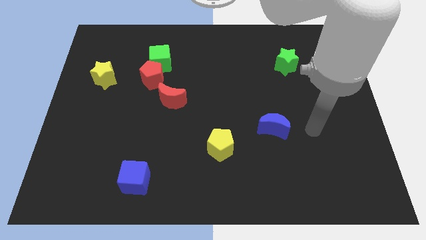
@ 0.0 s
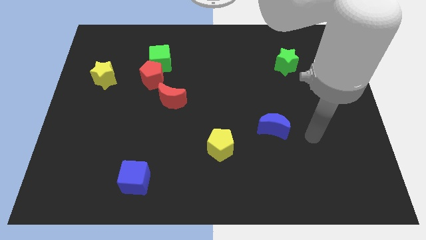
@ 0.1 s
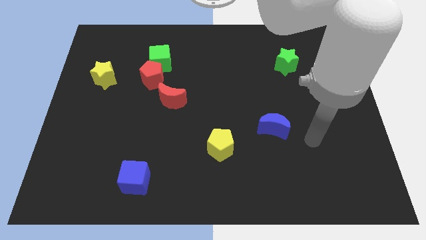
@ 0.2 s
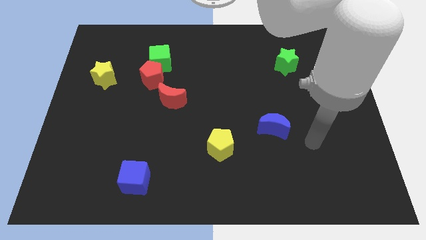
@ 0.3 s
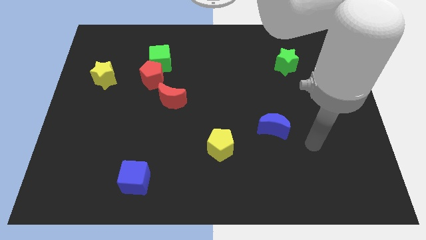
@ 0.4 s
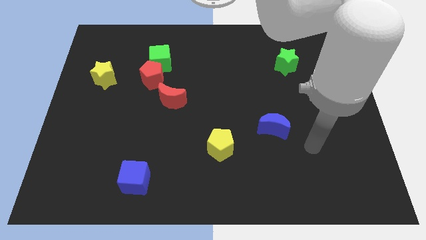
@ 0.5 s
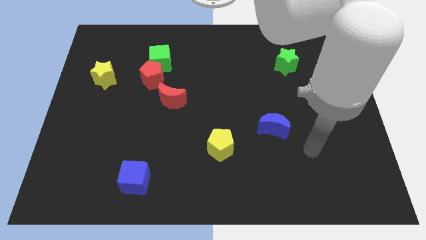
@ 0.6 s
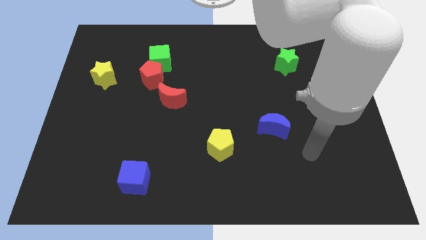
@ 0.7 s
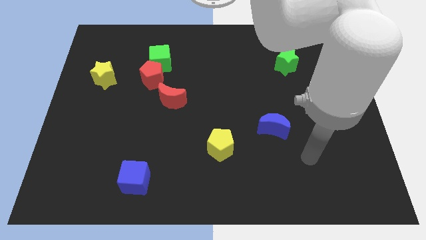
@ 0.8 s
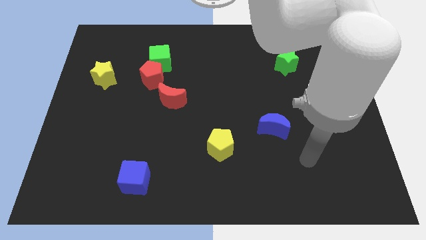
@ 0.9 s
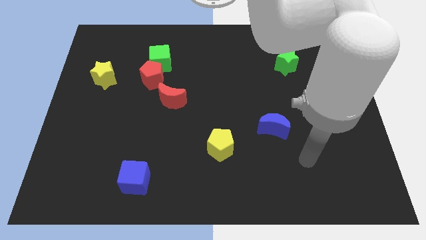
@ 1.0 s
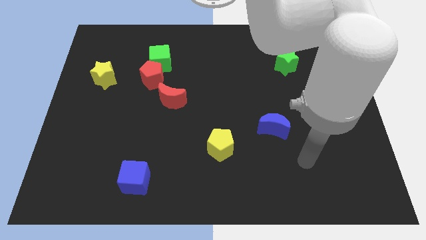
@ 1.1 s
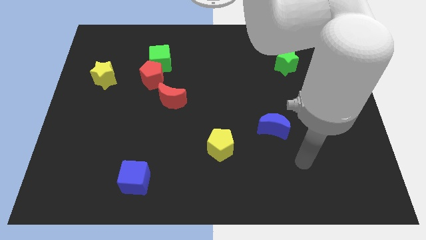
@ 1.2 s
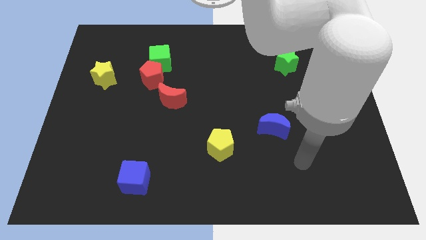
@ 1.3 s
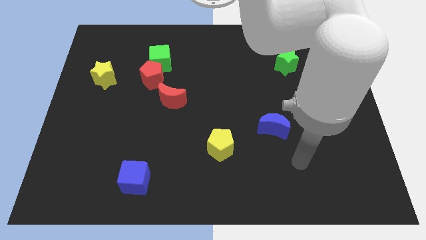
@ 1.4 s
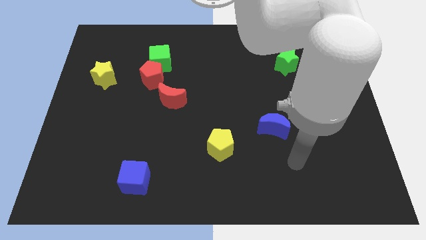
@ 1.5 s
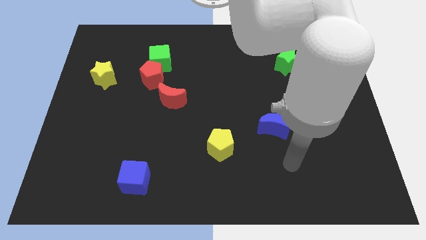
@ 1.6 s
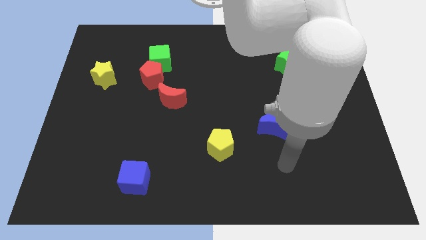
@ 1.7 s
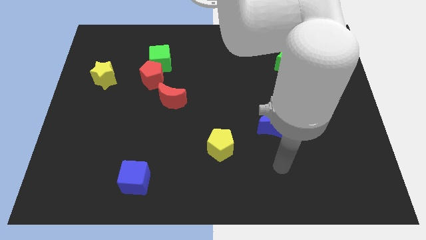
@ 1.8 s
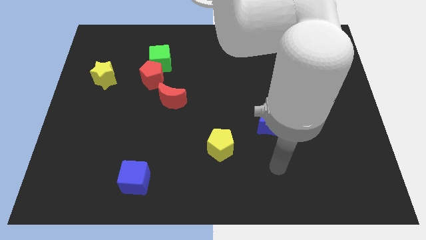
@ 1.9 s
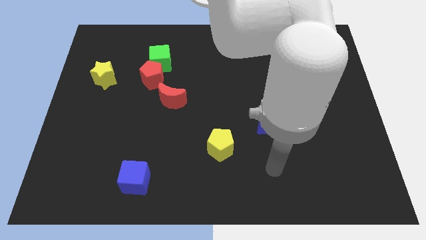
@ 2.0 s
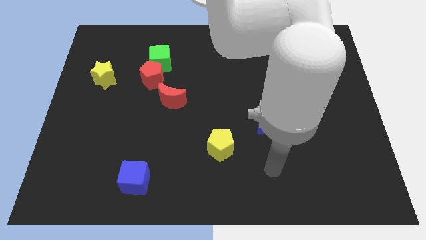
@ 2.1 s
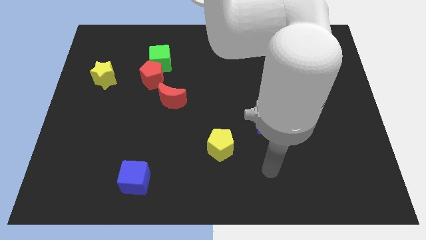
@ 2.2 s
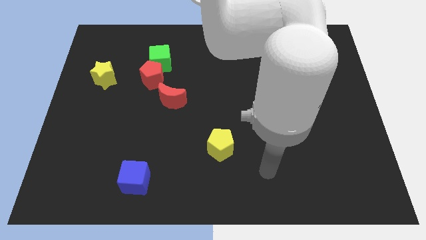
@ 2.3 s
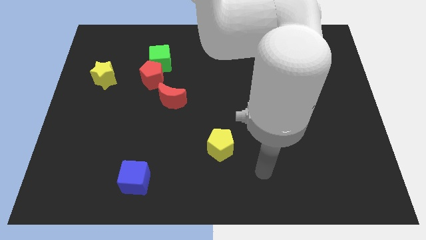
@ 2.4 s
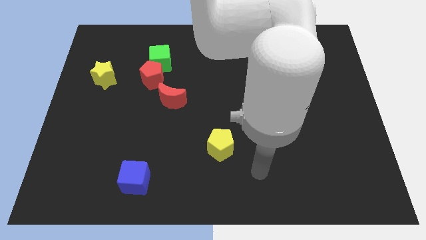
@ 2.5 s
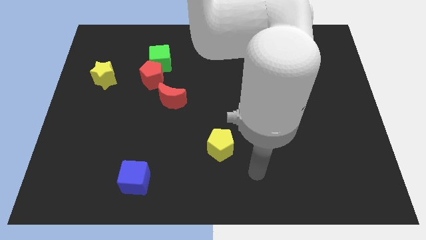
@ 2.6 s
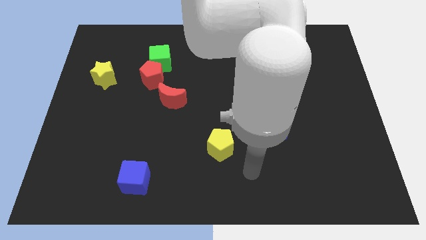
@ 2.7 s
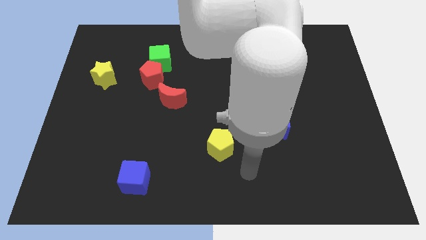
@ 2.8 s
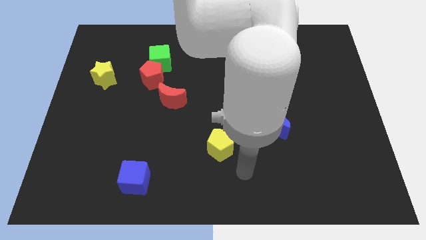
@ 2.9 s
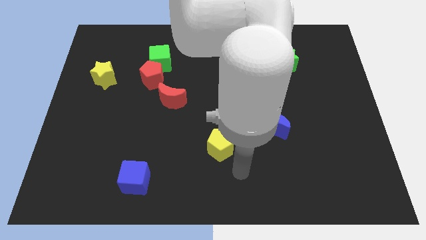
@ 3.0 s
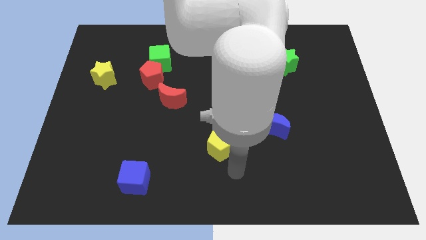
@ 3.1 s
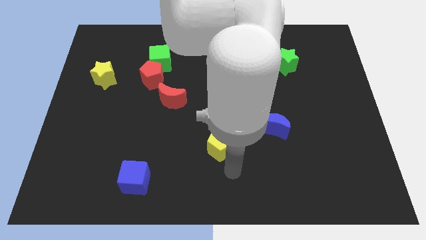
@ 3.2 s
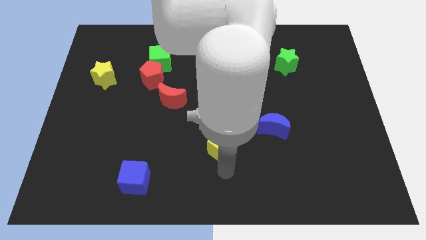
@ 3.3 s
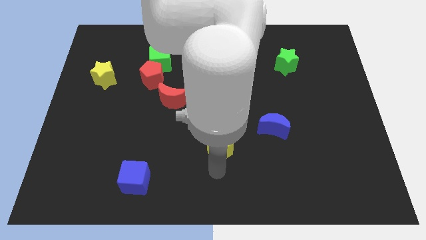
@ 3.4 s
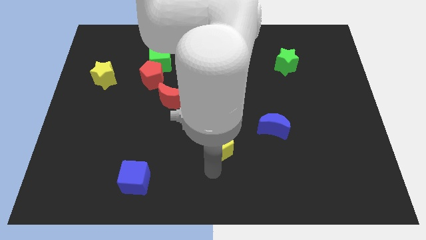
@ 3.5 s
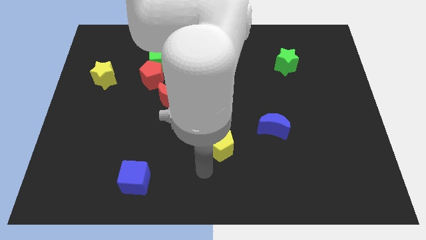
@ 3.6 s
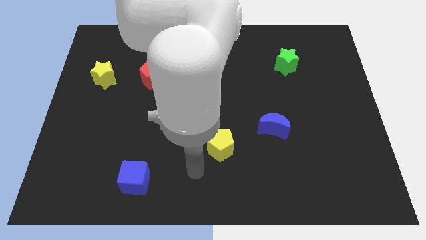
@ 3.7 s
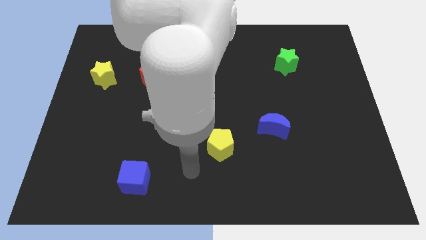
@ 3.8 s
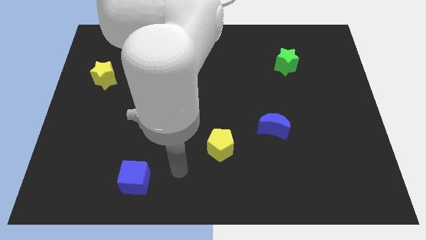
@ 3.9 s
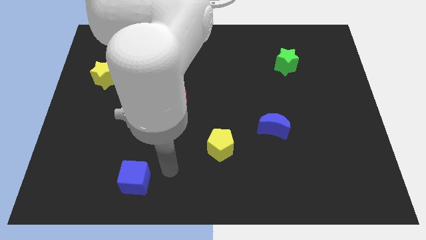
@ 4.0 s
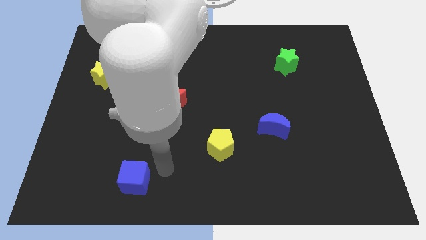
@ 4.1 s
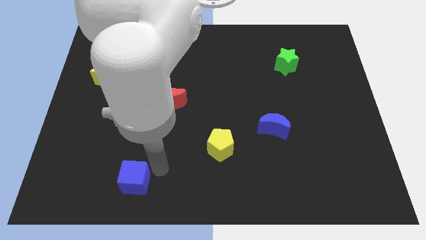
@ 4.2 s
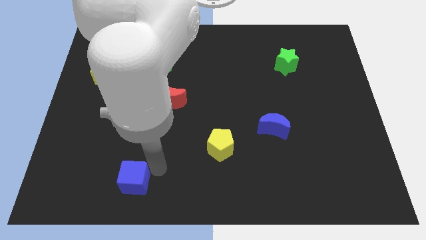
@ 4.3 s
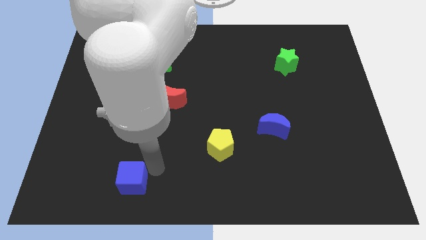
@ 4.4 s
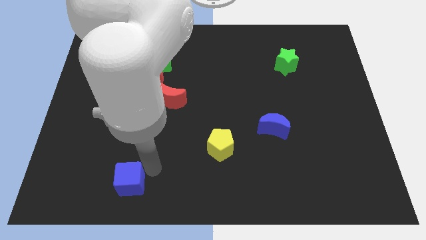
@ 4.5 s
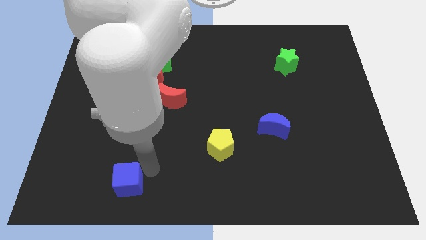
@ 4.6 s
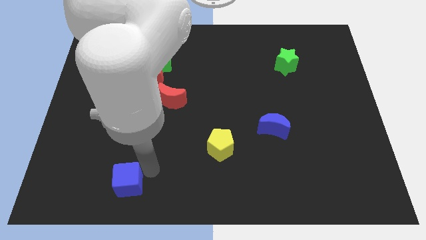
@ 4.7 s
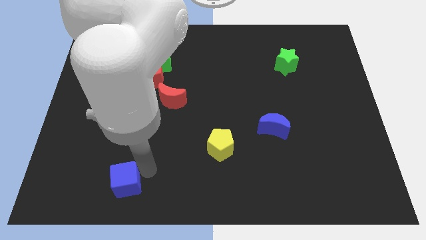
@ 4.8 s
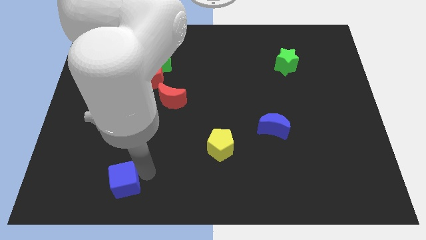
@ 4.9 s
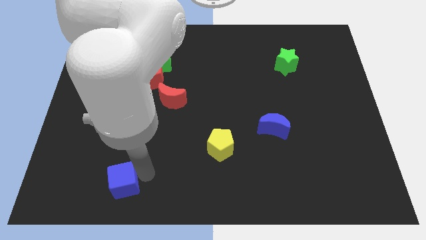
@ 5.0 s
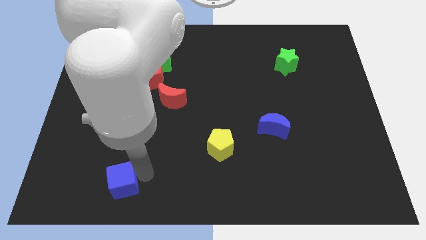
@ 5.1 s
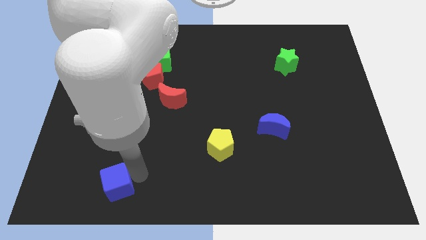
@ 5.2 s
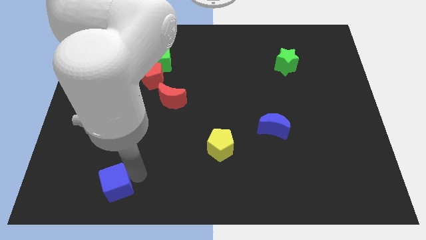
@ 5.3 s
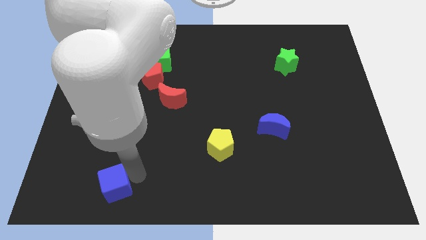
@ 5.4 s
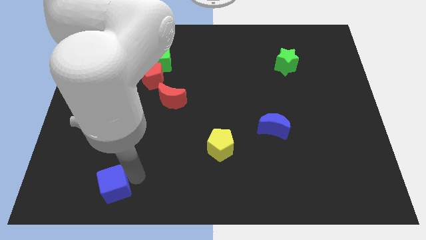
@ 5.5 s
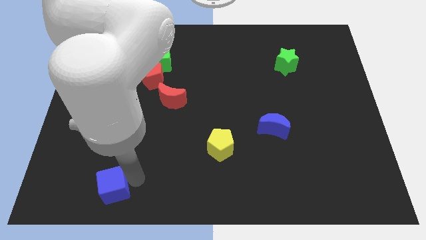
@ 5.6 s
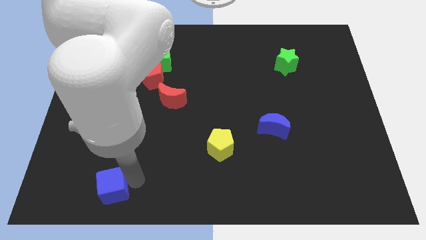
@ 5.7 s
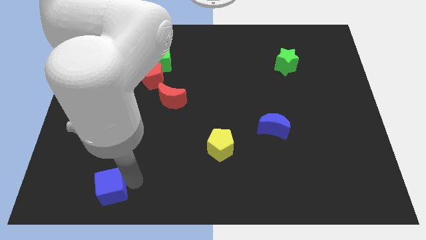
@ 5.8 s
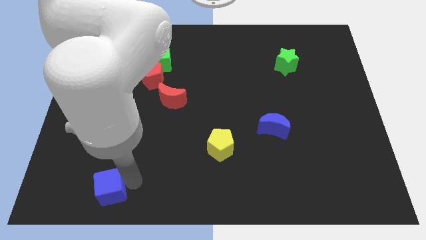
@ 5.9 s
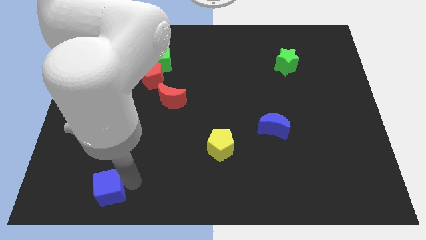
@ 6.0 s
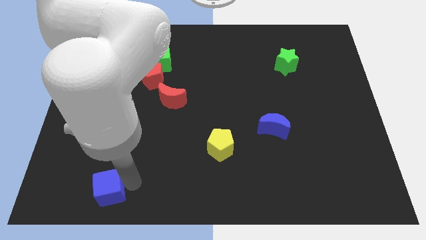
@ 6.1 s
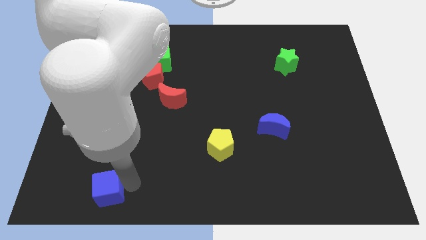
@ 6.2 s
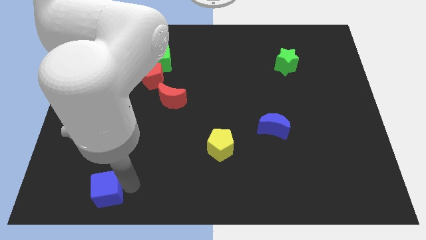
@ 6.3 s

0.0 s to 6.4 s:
move the blue cube slightly to the left

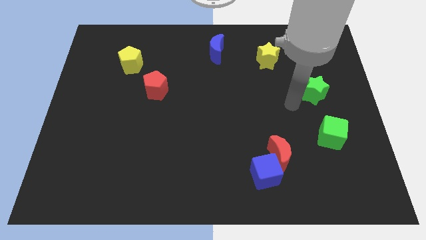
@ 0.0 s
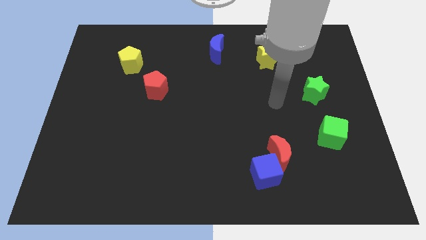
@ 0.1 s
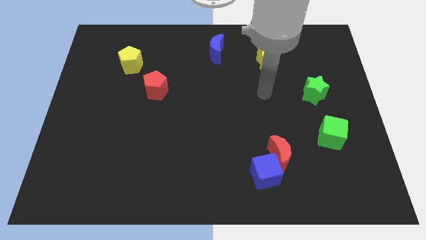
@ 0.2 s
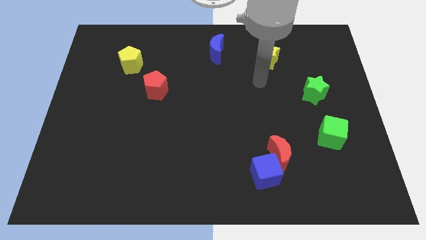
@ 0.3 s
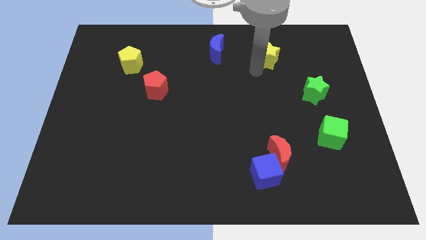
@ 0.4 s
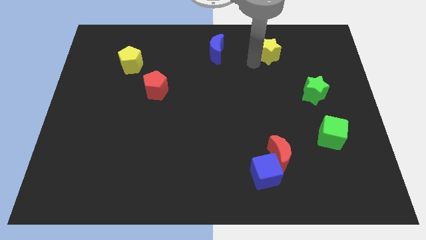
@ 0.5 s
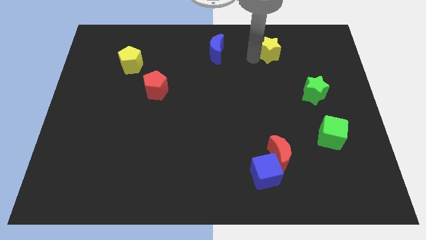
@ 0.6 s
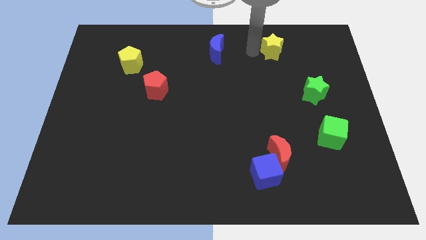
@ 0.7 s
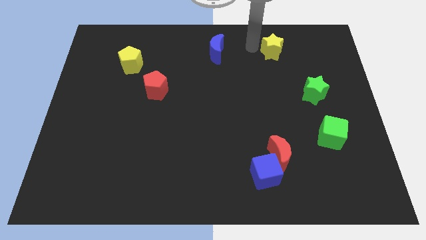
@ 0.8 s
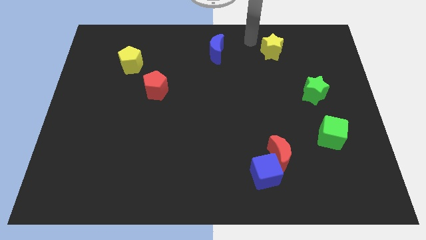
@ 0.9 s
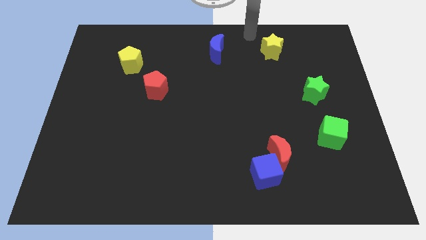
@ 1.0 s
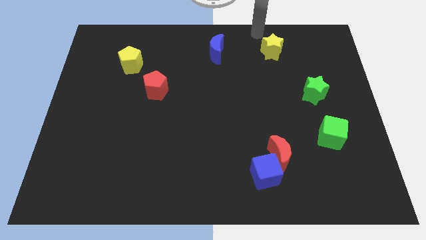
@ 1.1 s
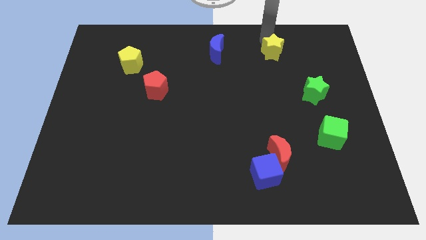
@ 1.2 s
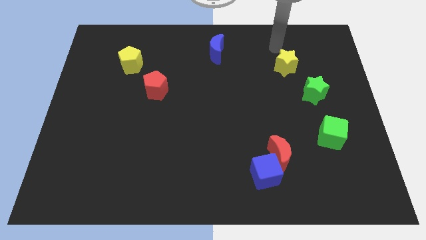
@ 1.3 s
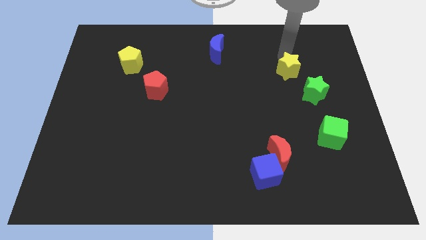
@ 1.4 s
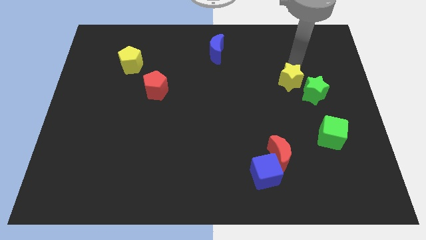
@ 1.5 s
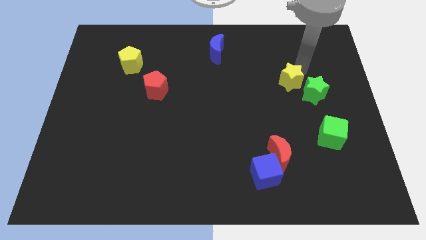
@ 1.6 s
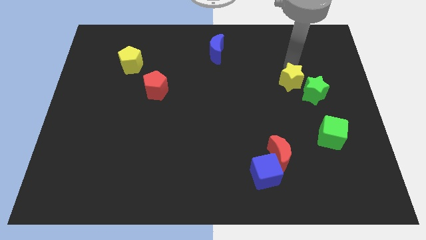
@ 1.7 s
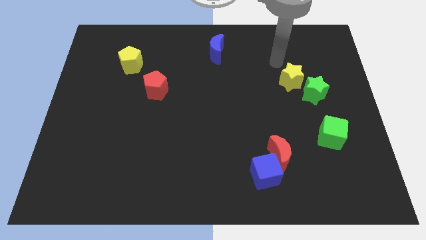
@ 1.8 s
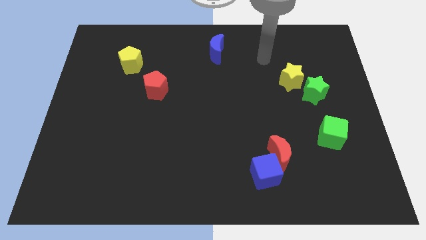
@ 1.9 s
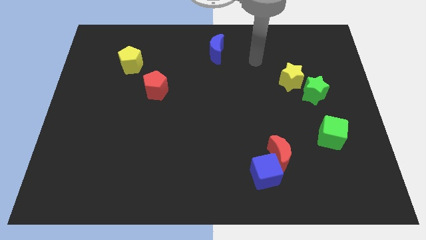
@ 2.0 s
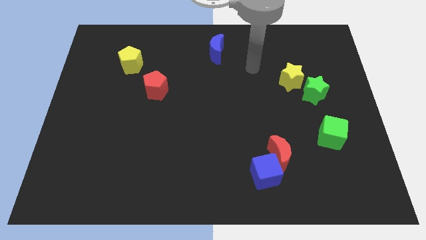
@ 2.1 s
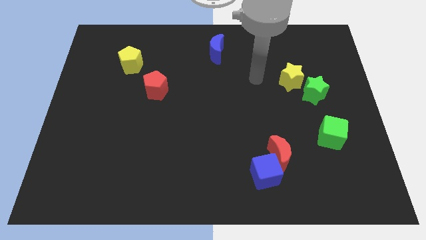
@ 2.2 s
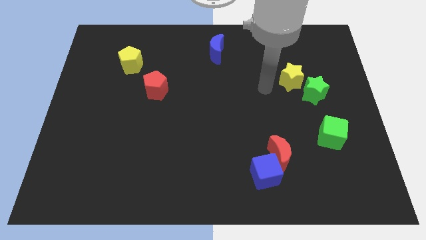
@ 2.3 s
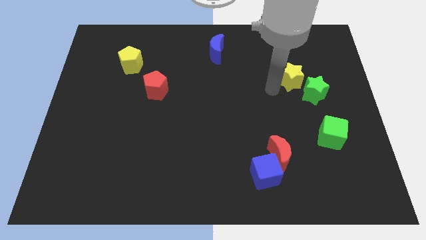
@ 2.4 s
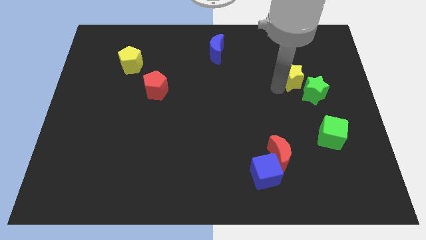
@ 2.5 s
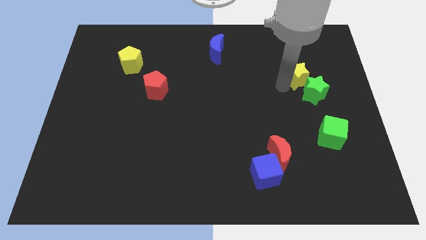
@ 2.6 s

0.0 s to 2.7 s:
push the yellow star downward
